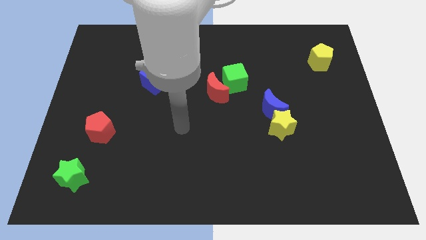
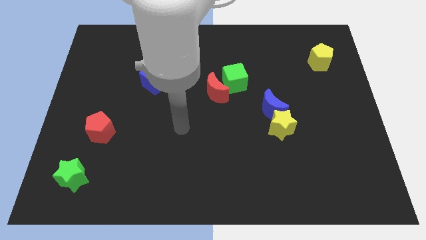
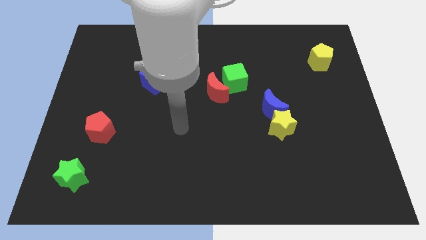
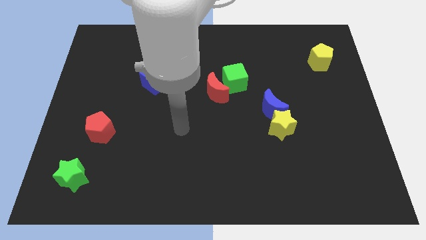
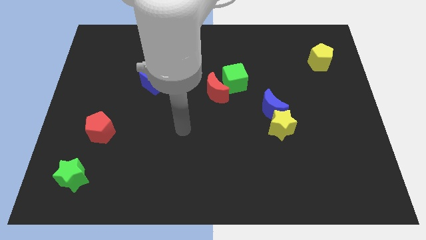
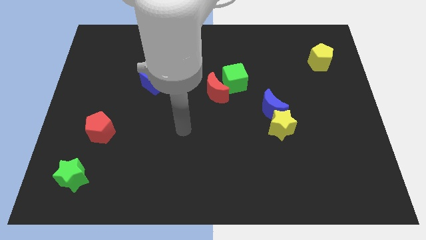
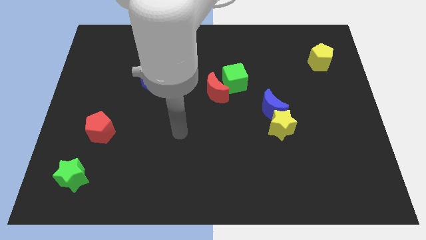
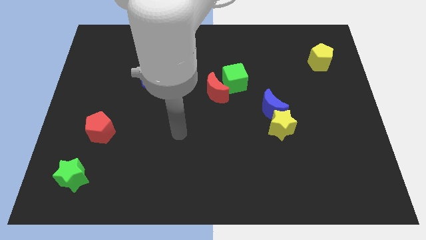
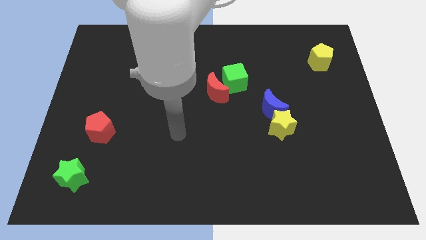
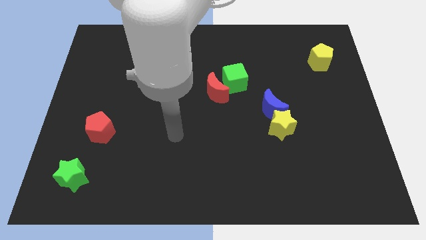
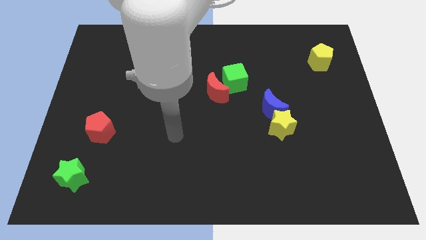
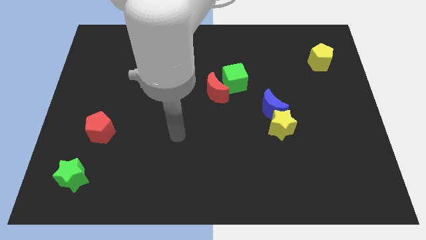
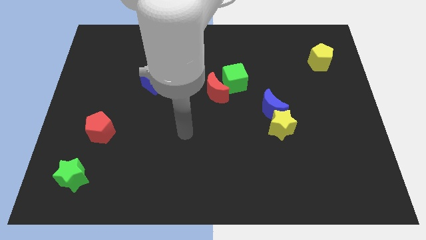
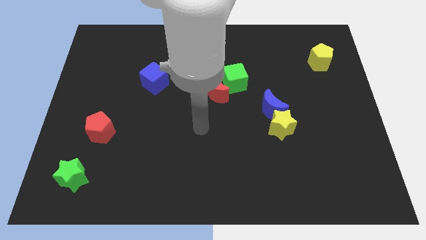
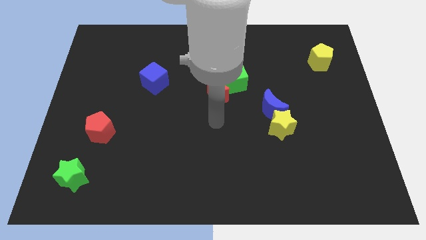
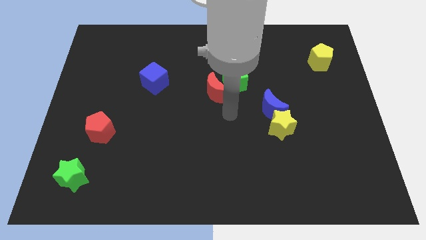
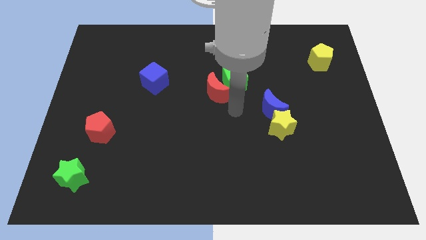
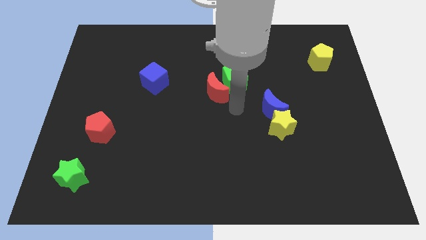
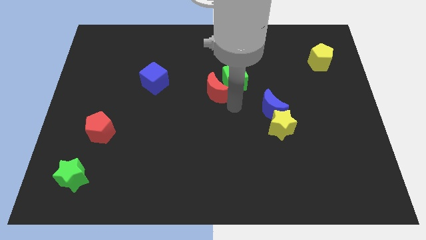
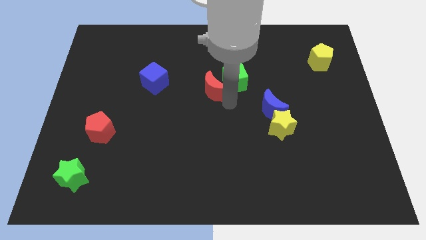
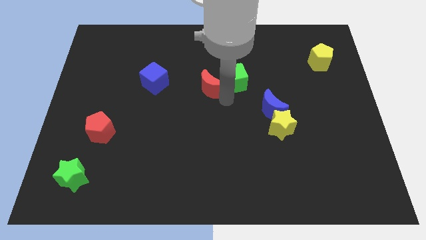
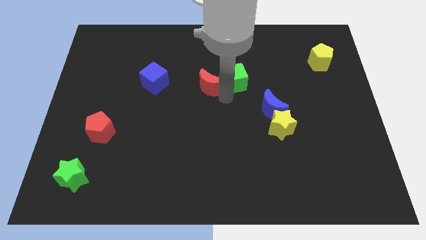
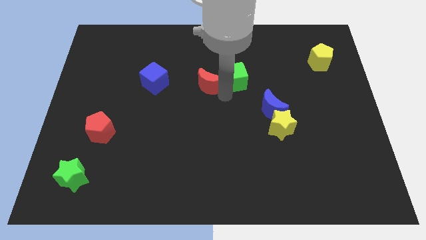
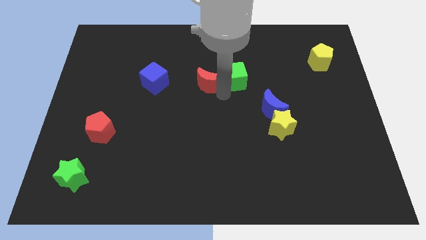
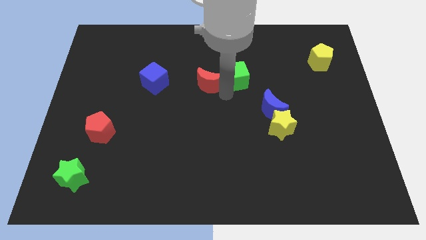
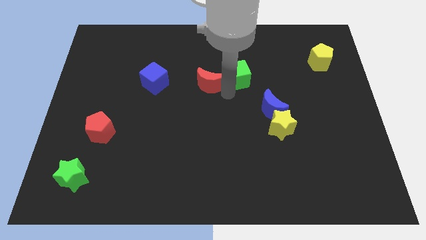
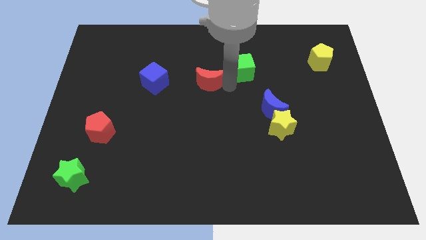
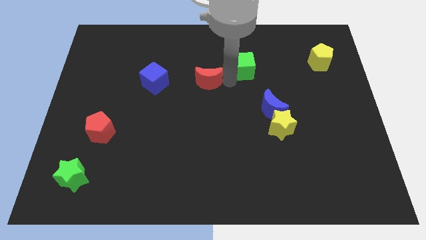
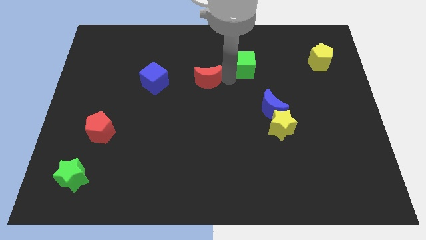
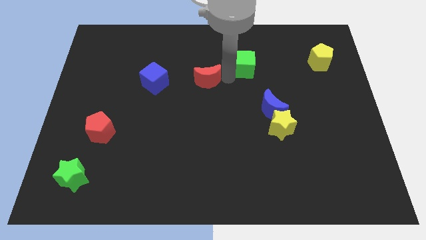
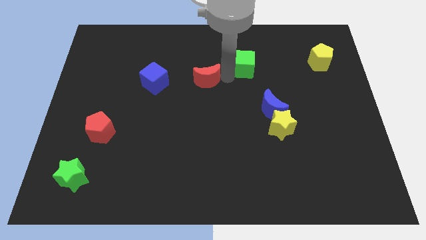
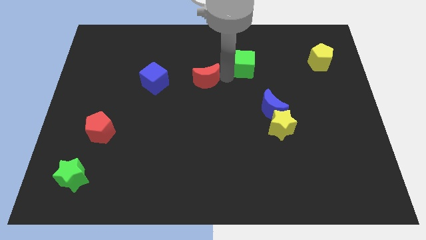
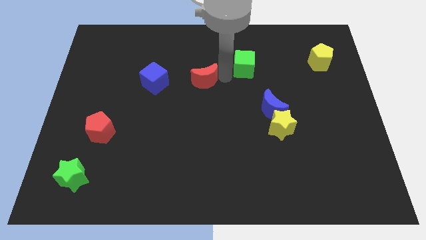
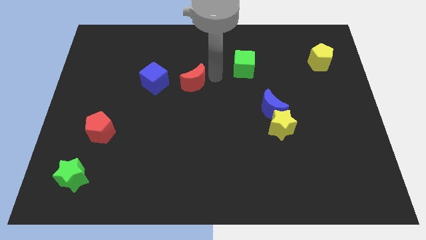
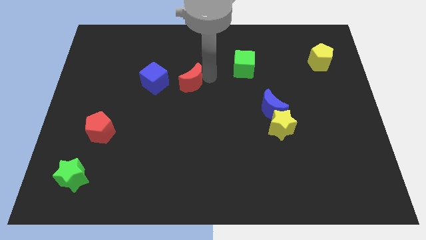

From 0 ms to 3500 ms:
separate the red moon and green cube

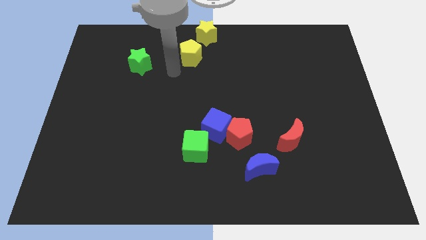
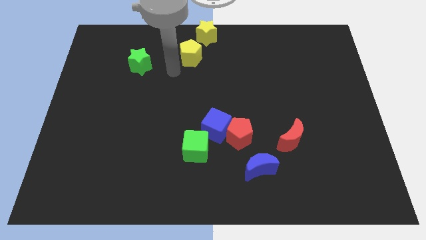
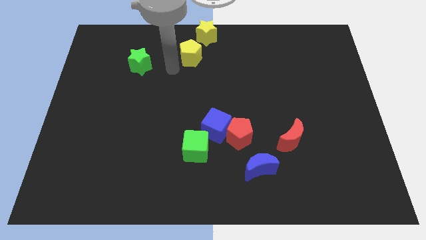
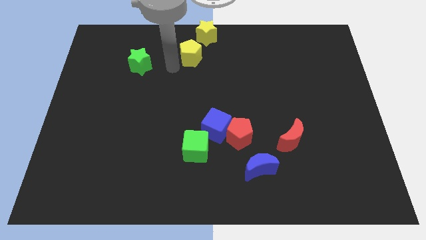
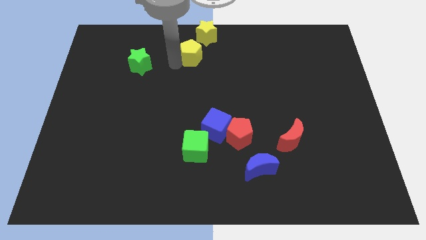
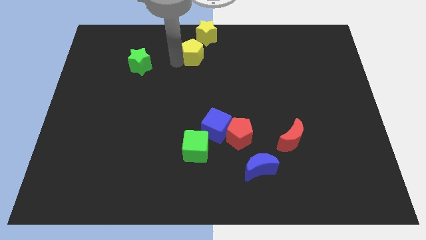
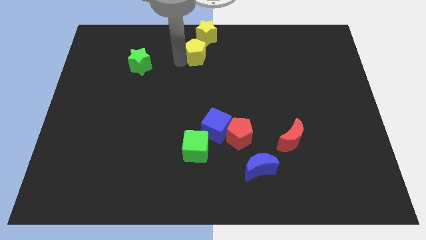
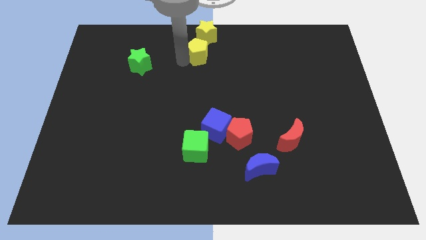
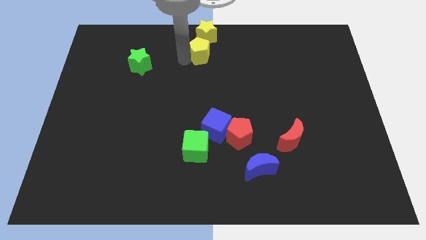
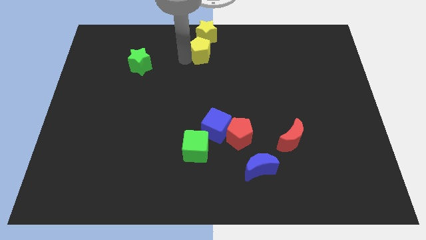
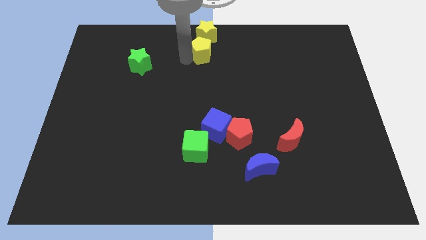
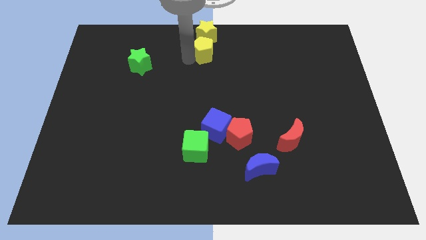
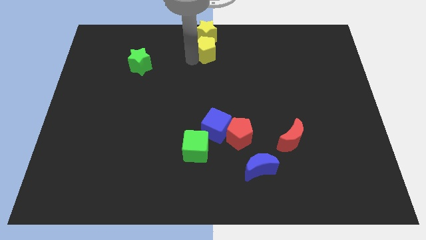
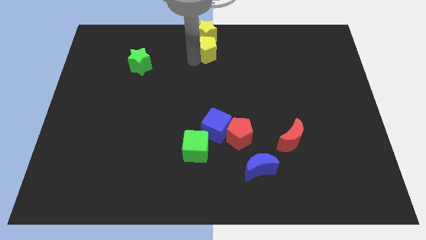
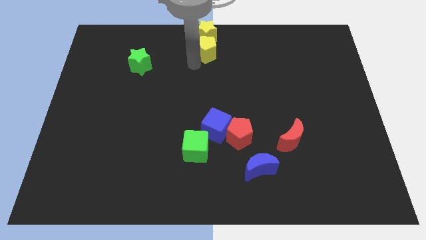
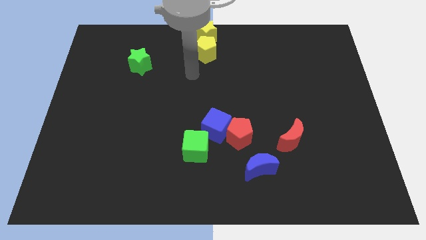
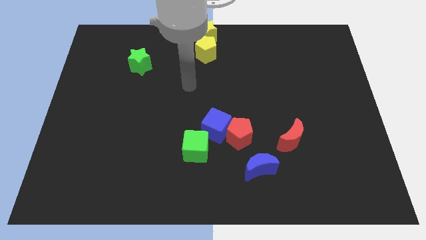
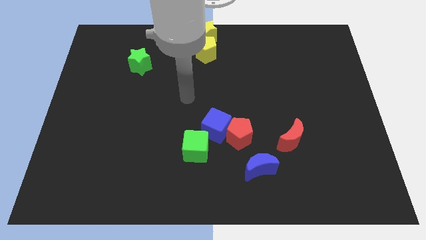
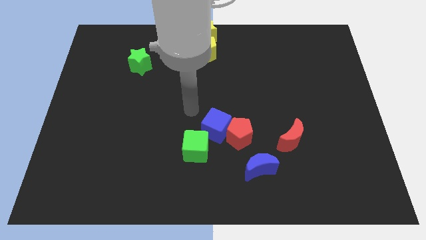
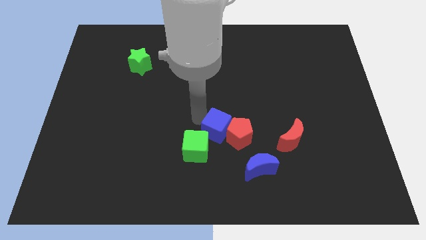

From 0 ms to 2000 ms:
place the yellow pentagon vertically below the yellow star

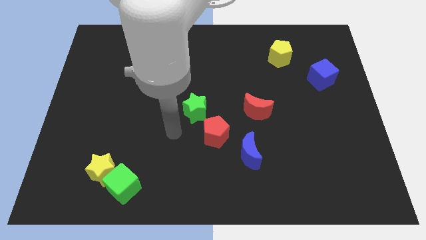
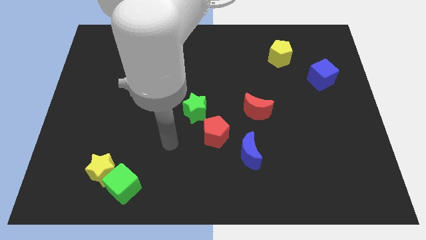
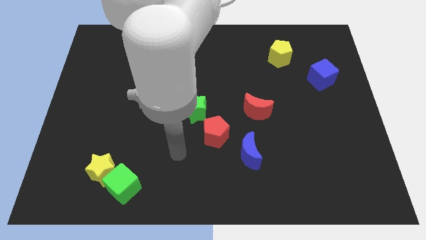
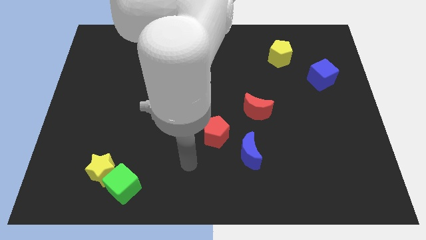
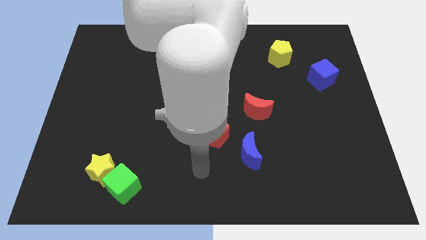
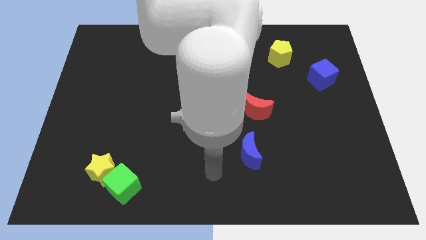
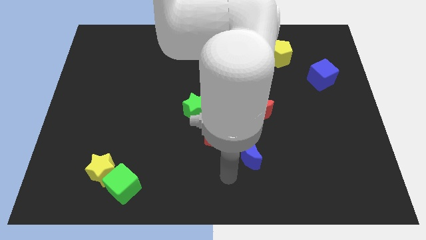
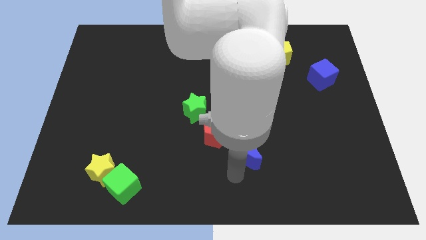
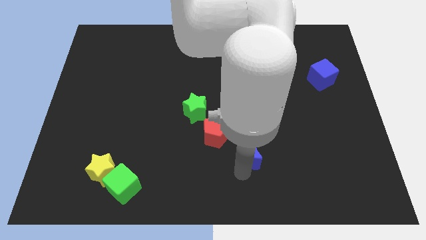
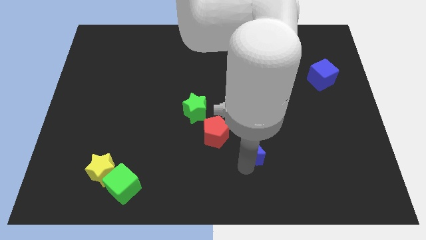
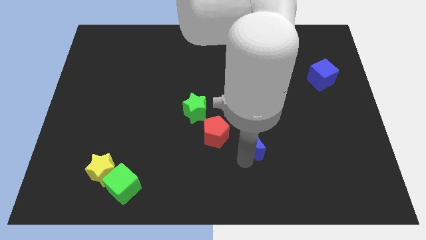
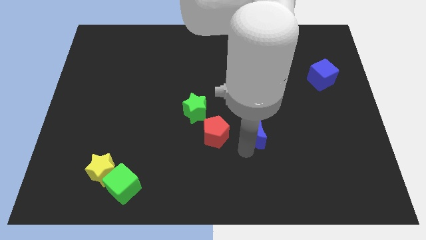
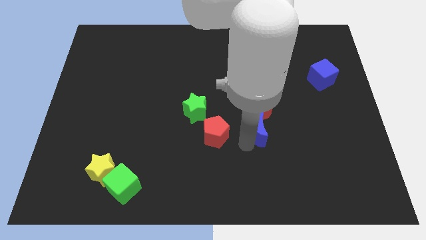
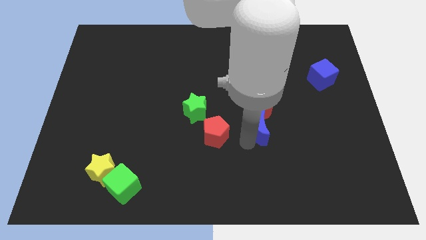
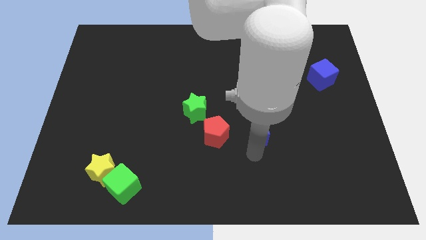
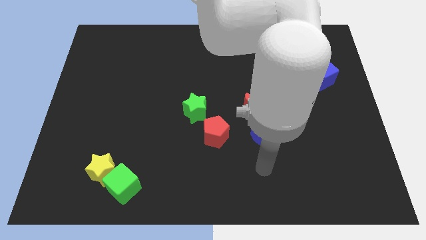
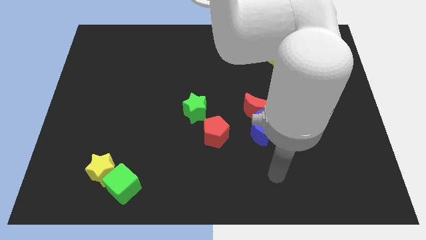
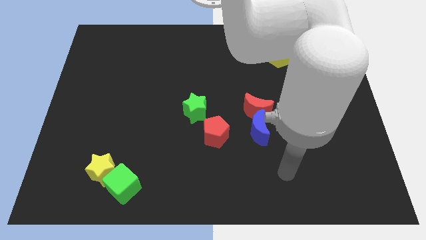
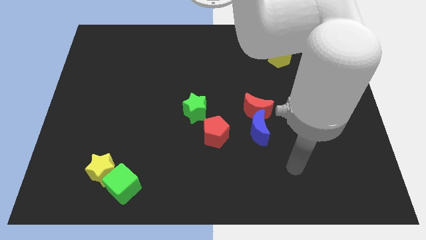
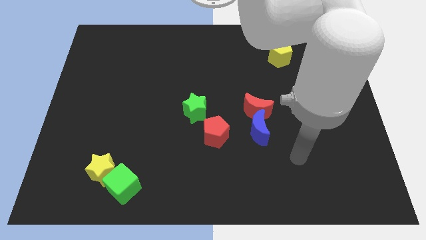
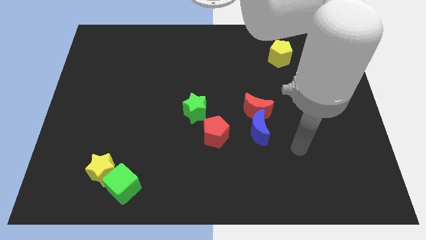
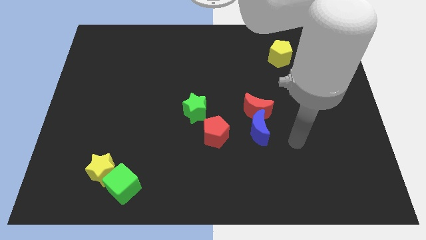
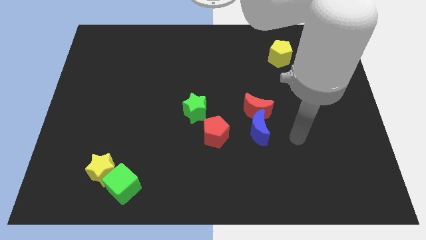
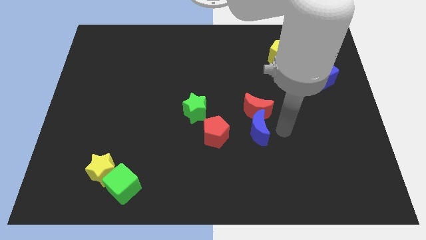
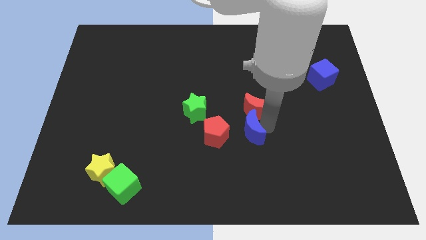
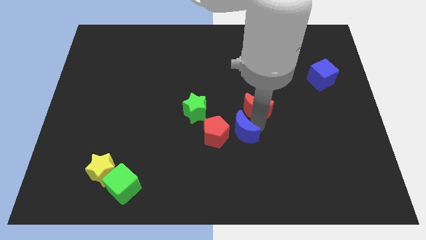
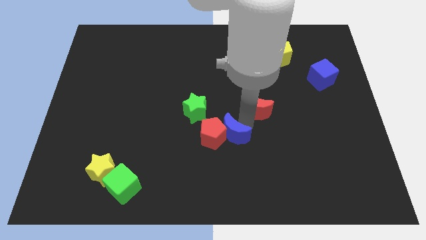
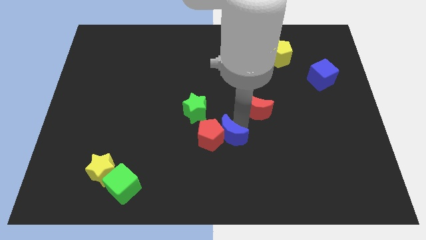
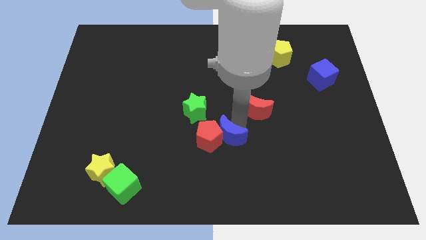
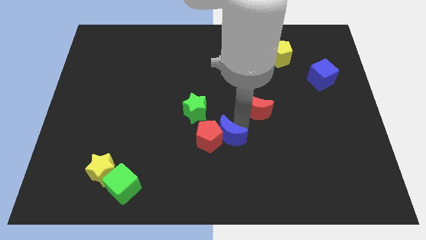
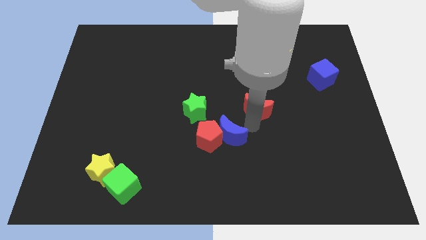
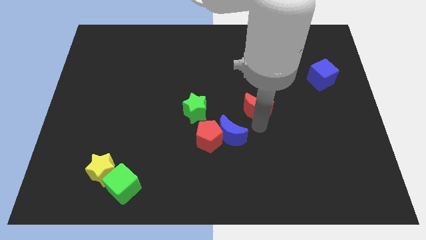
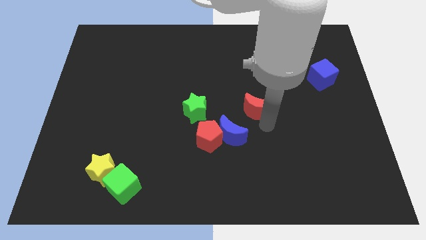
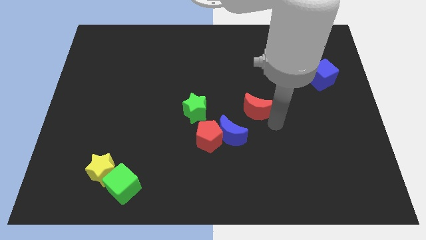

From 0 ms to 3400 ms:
move the blue moon into the red pentagon

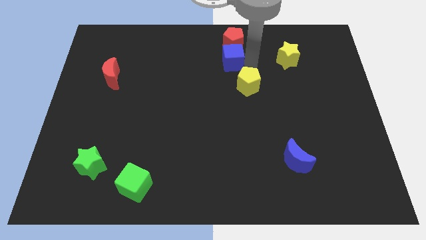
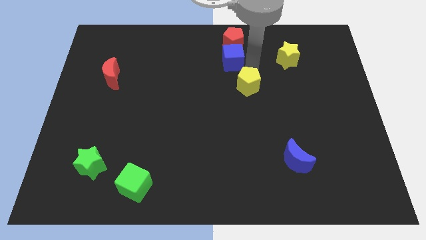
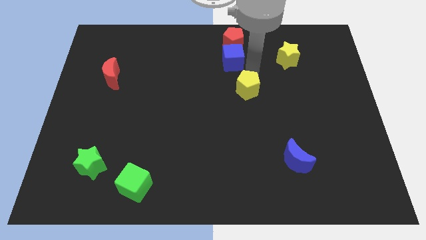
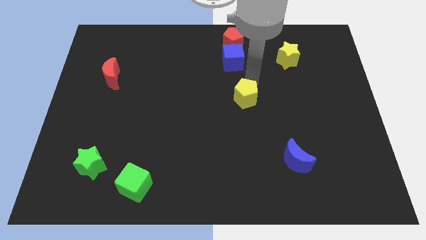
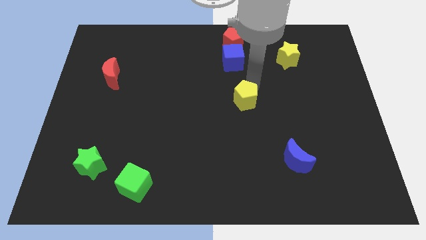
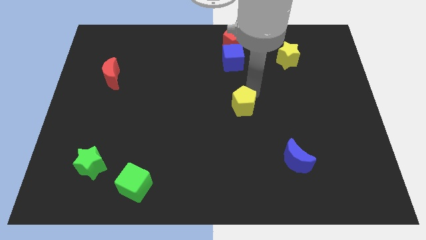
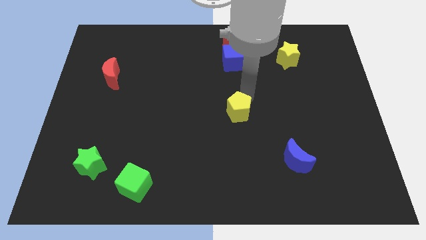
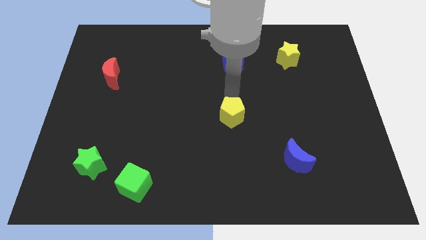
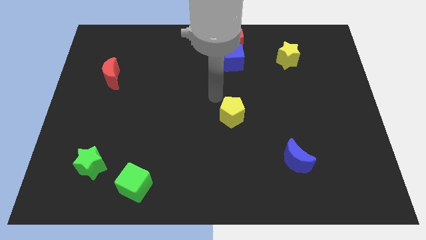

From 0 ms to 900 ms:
push yellow pentagon slightly downwards
